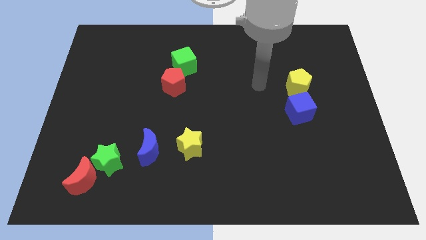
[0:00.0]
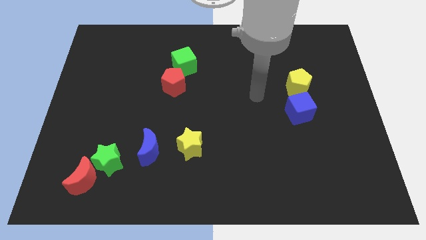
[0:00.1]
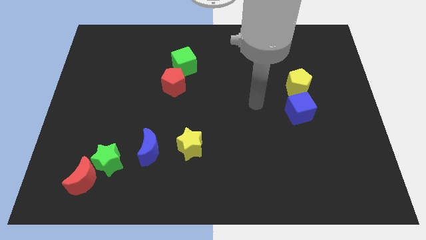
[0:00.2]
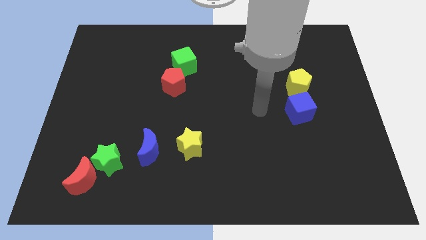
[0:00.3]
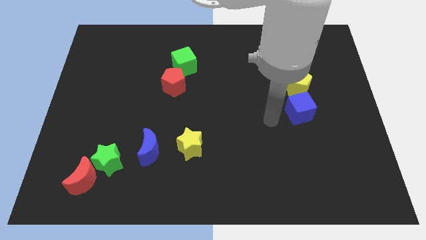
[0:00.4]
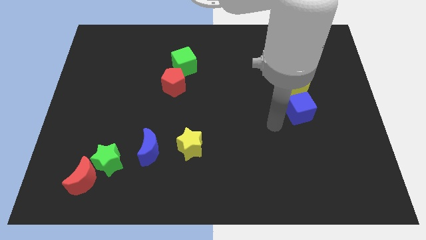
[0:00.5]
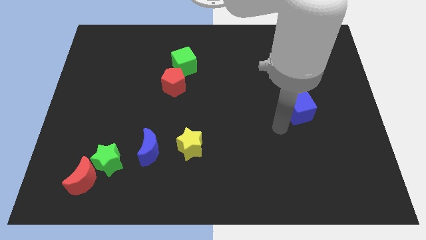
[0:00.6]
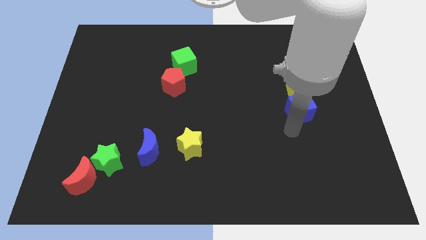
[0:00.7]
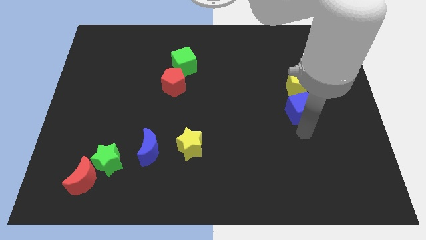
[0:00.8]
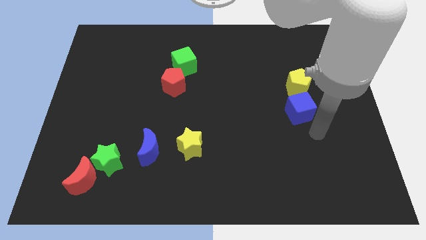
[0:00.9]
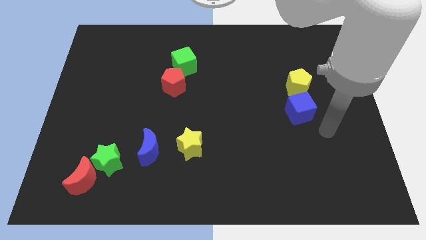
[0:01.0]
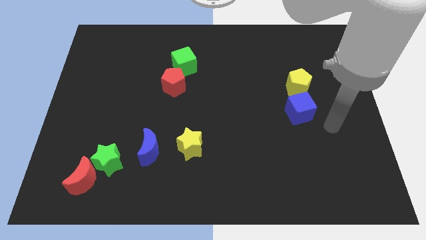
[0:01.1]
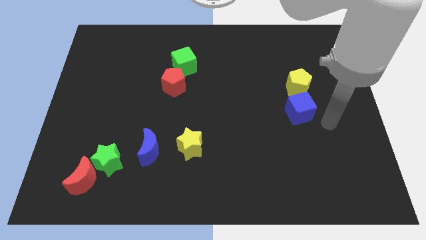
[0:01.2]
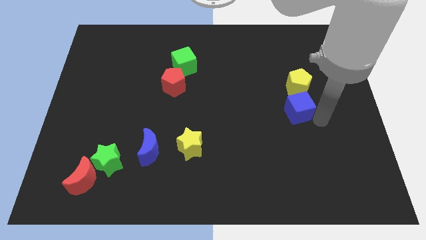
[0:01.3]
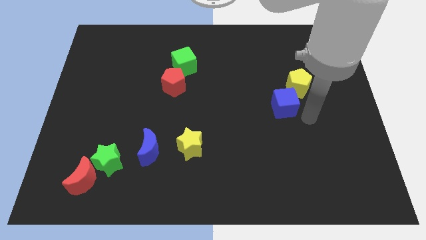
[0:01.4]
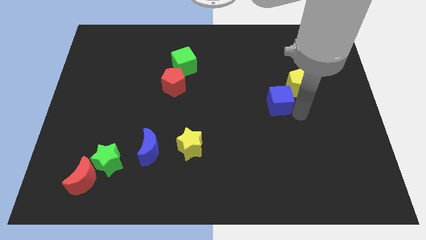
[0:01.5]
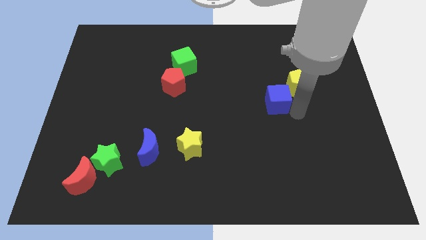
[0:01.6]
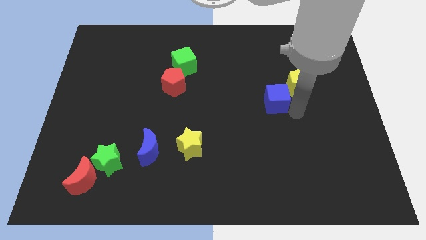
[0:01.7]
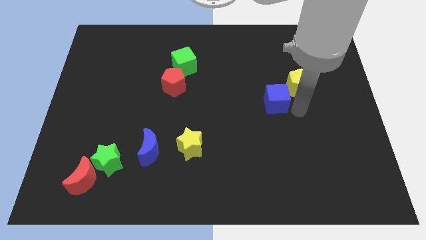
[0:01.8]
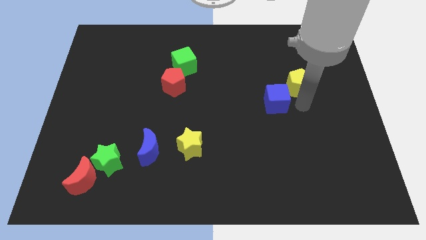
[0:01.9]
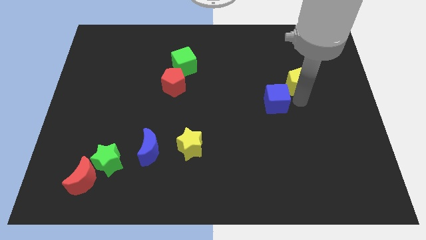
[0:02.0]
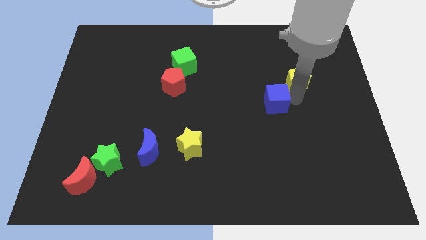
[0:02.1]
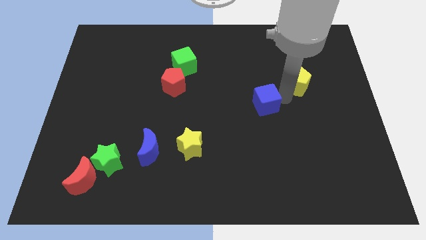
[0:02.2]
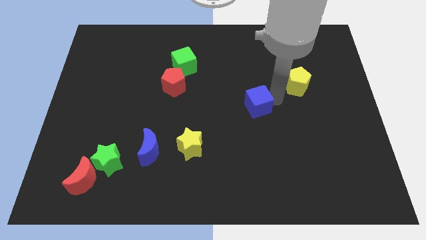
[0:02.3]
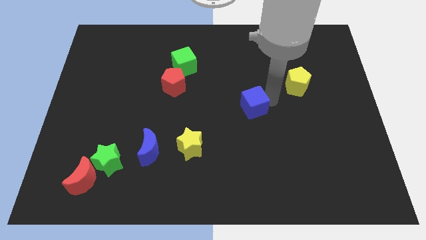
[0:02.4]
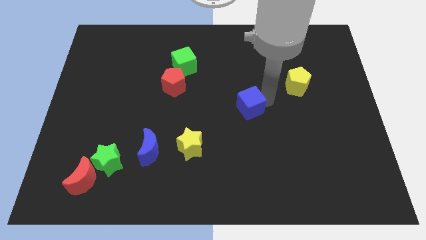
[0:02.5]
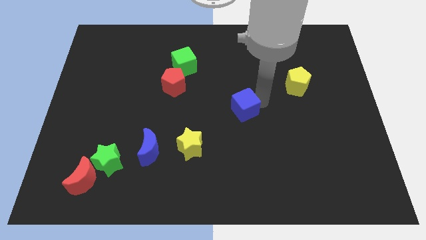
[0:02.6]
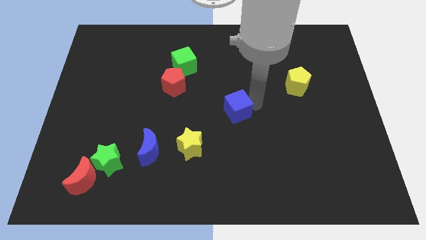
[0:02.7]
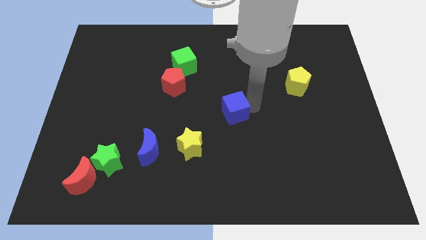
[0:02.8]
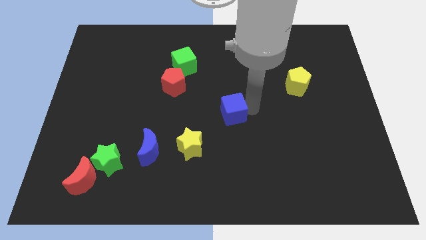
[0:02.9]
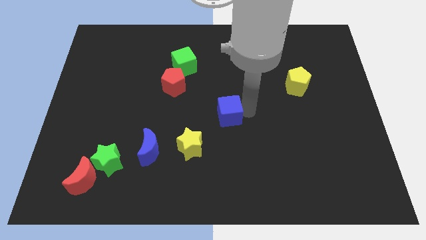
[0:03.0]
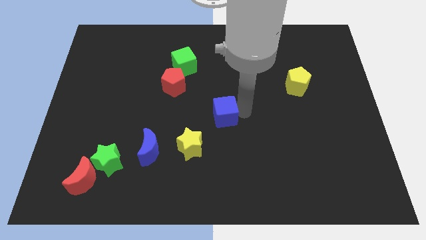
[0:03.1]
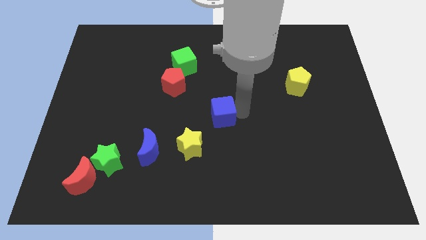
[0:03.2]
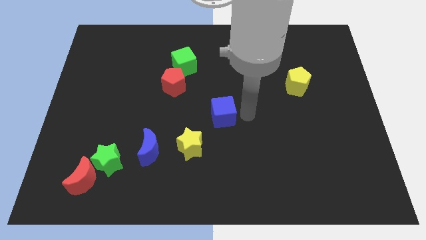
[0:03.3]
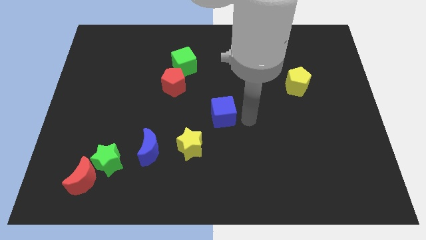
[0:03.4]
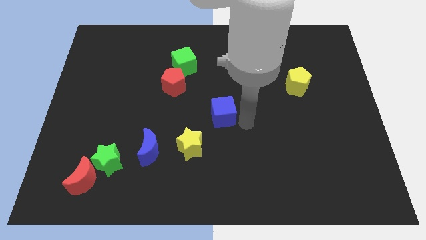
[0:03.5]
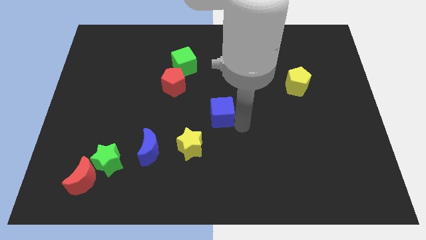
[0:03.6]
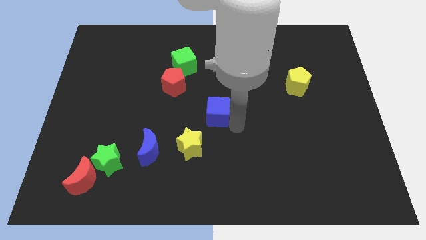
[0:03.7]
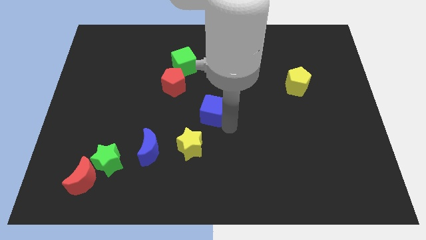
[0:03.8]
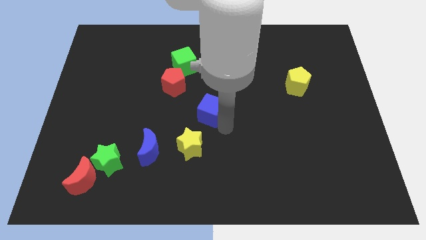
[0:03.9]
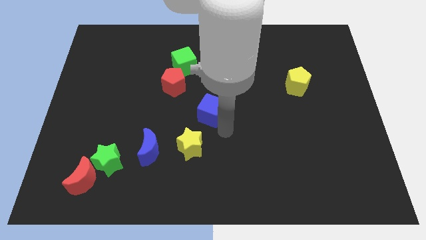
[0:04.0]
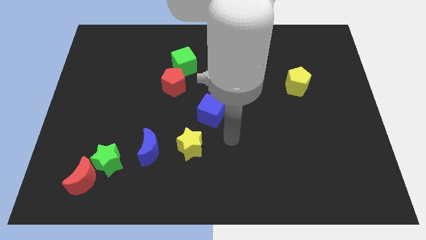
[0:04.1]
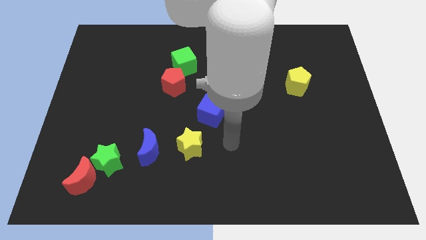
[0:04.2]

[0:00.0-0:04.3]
place blue cube in the center

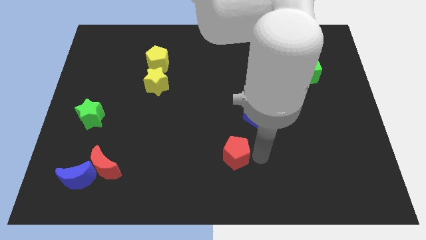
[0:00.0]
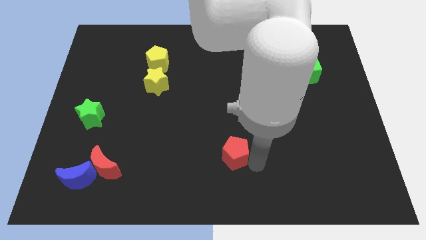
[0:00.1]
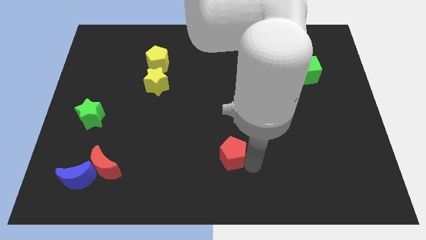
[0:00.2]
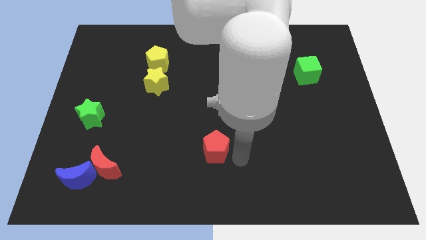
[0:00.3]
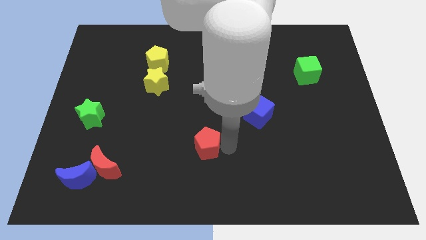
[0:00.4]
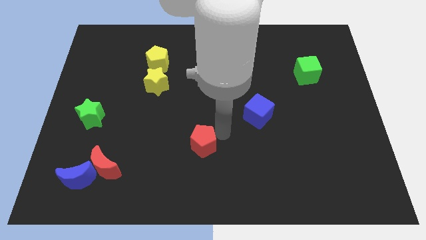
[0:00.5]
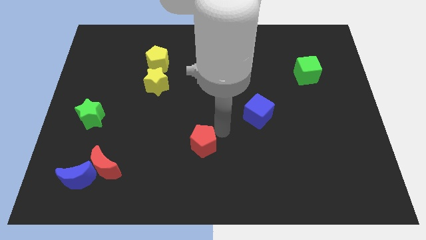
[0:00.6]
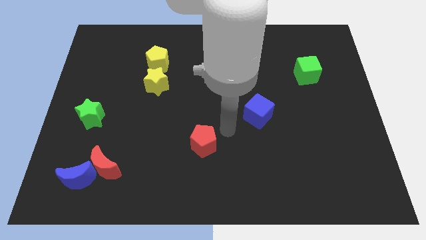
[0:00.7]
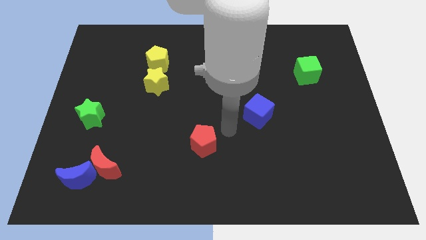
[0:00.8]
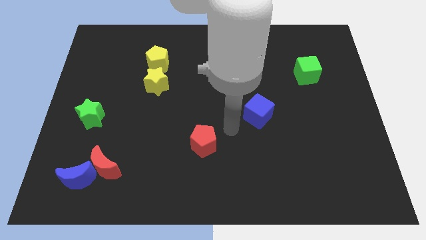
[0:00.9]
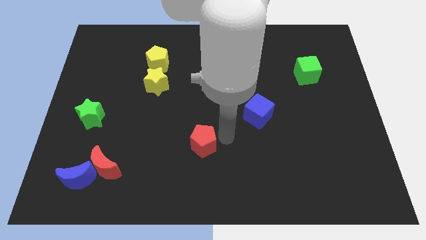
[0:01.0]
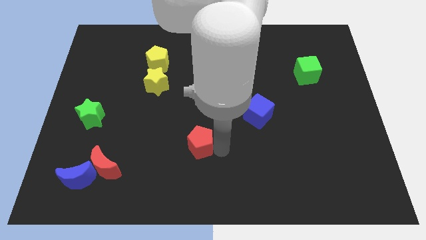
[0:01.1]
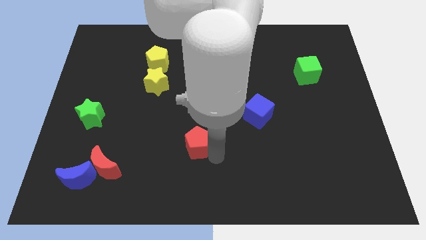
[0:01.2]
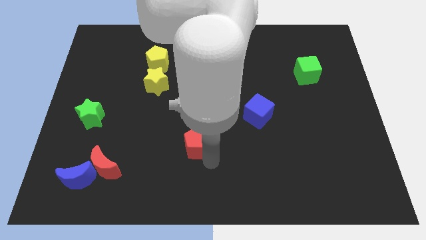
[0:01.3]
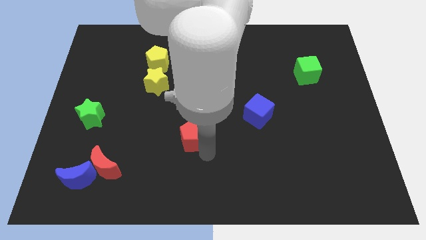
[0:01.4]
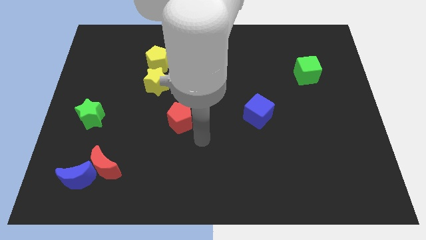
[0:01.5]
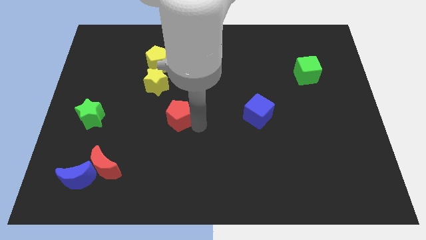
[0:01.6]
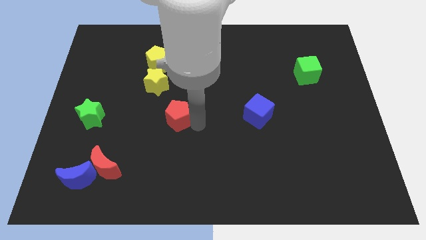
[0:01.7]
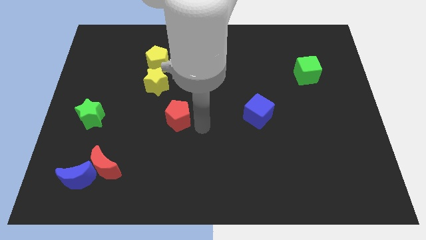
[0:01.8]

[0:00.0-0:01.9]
move the red pentagon towards the yellow star

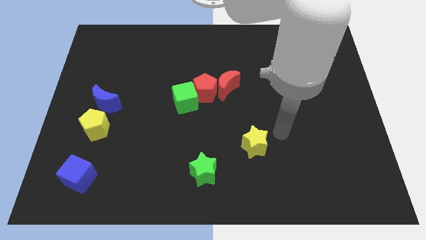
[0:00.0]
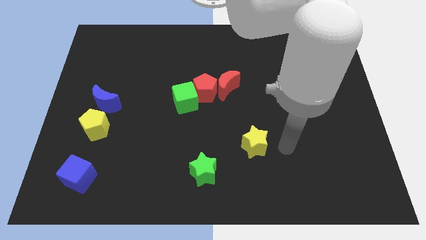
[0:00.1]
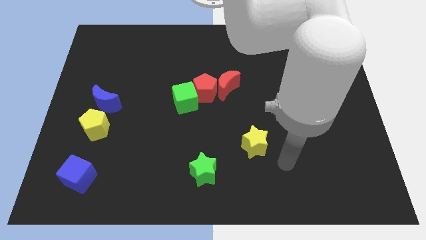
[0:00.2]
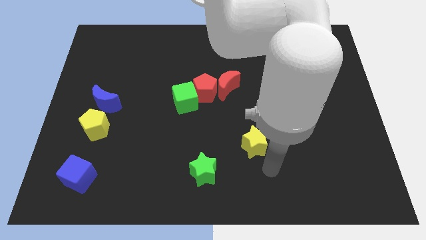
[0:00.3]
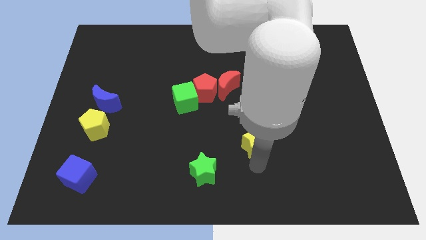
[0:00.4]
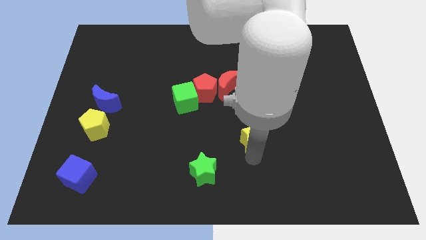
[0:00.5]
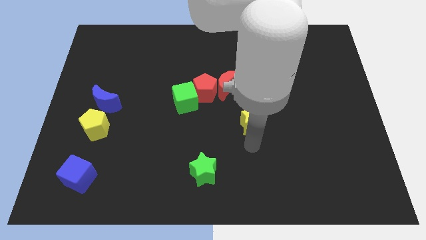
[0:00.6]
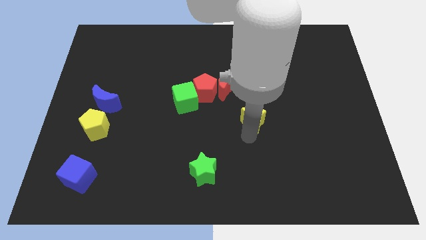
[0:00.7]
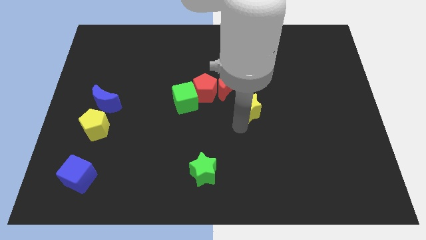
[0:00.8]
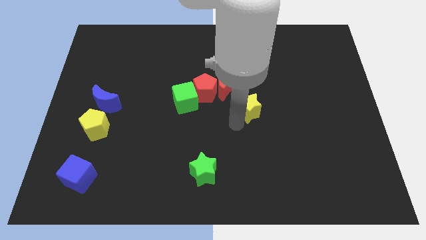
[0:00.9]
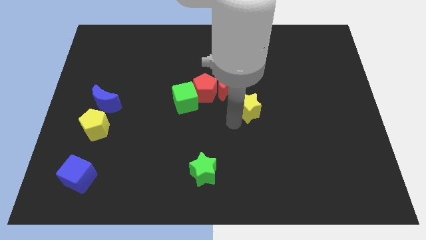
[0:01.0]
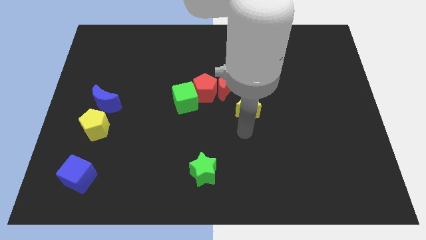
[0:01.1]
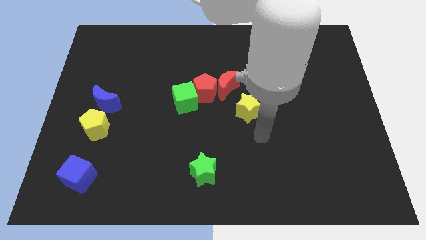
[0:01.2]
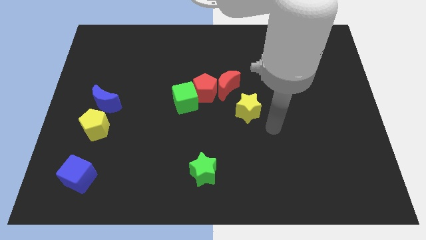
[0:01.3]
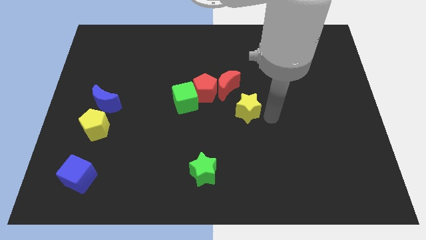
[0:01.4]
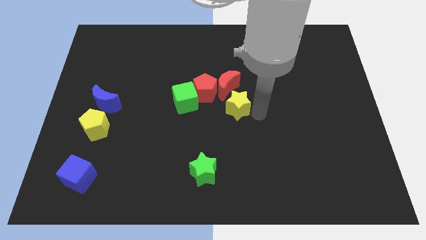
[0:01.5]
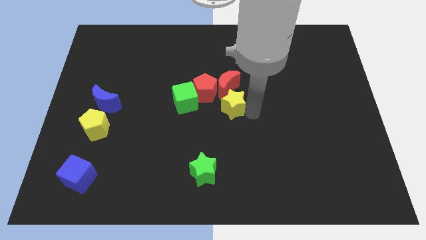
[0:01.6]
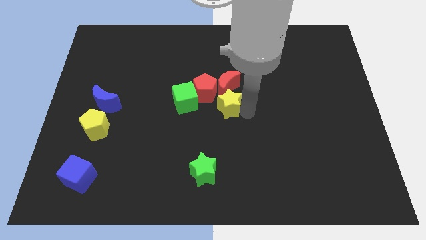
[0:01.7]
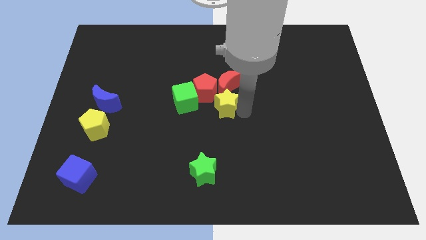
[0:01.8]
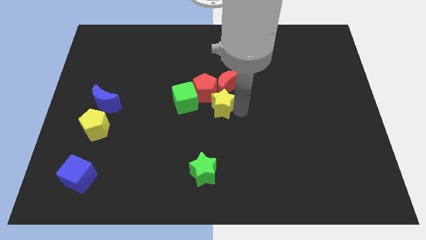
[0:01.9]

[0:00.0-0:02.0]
move the yellow star to the bottom of the red crescent

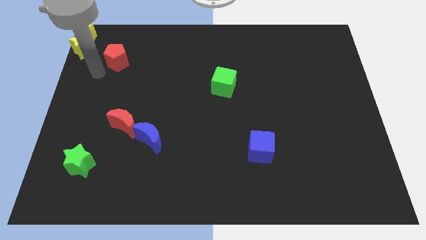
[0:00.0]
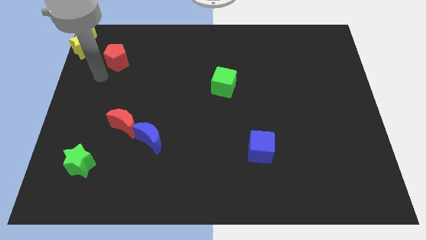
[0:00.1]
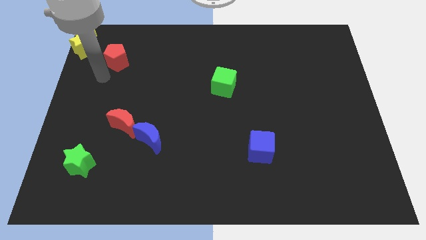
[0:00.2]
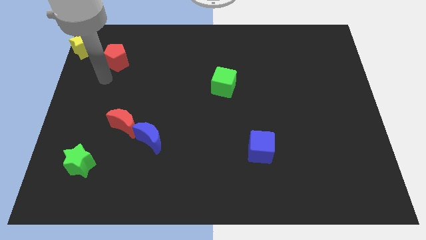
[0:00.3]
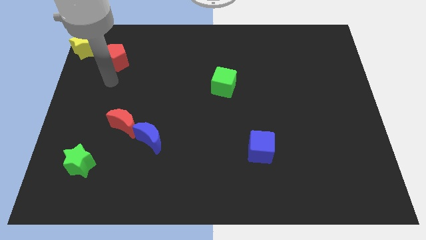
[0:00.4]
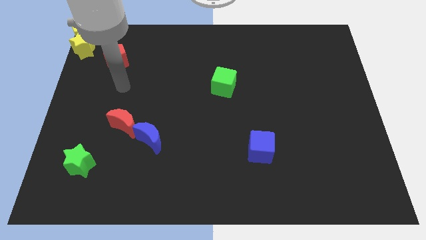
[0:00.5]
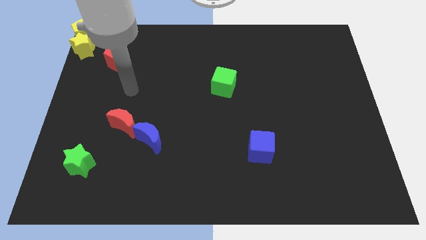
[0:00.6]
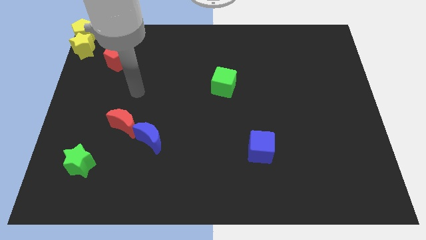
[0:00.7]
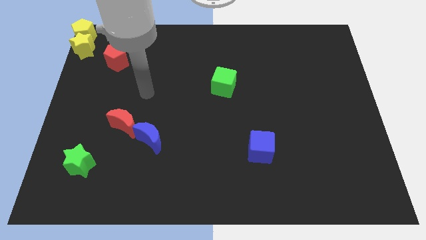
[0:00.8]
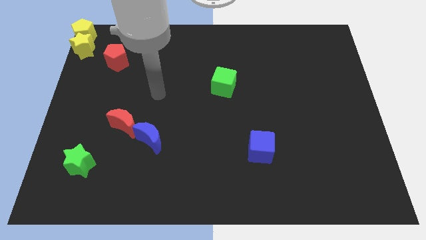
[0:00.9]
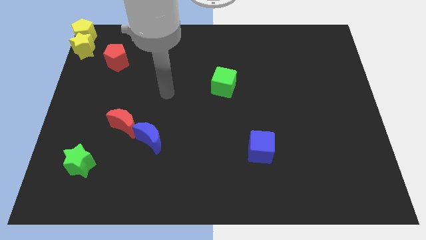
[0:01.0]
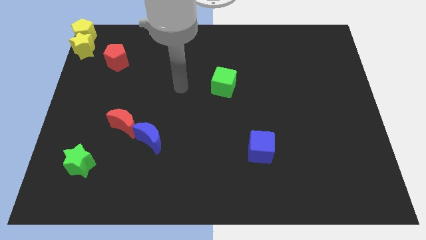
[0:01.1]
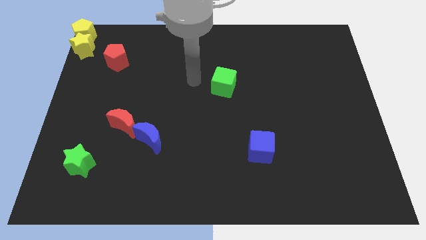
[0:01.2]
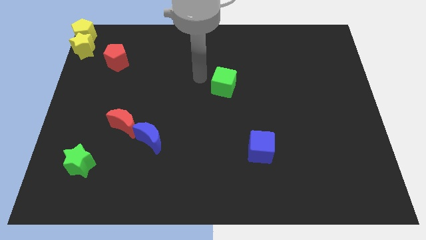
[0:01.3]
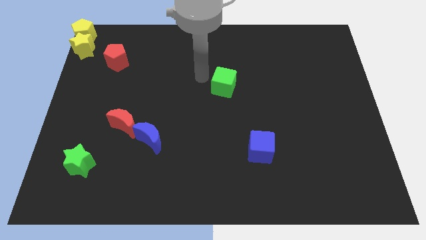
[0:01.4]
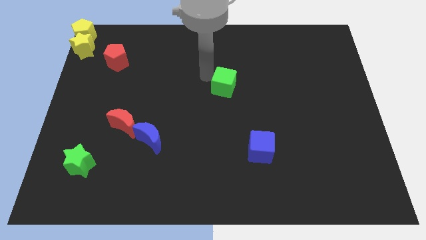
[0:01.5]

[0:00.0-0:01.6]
point your hand at the left side of the green cube
